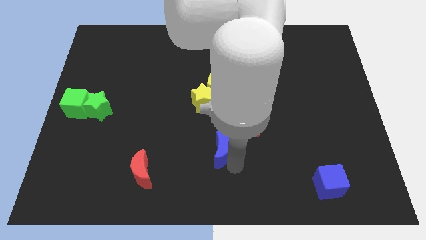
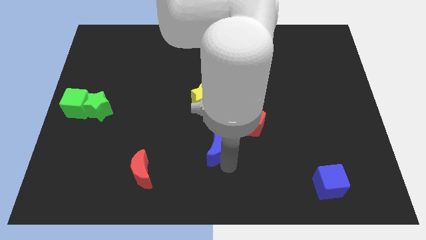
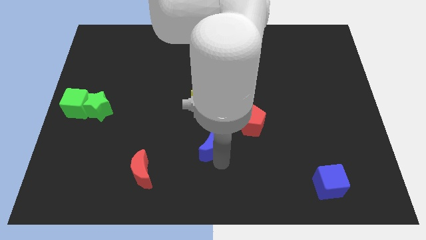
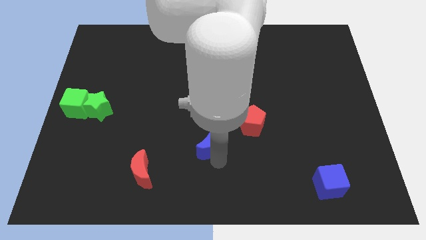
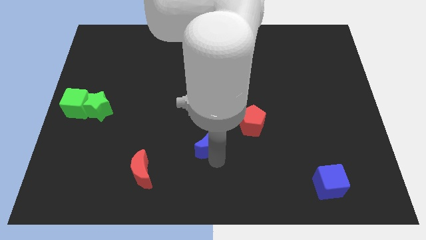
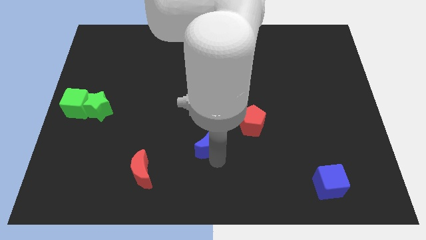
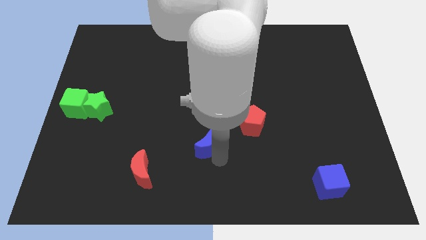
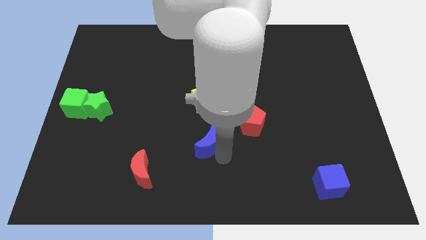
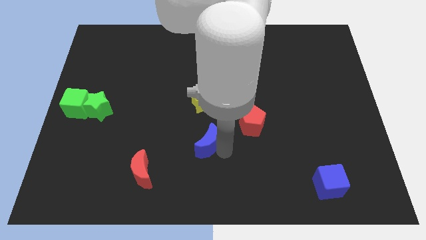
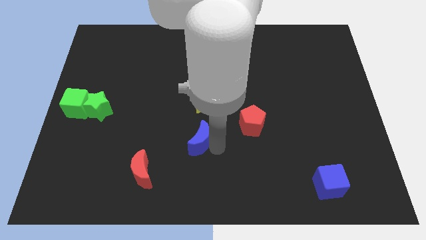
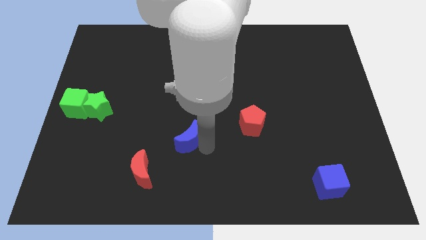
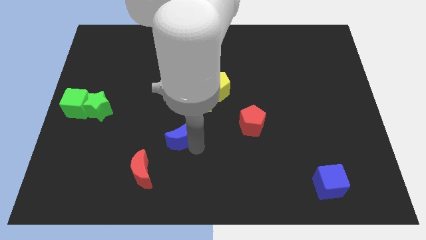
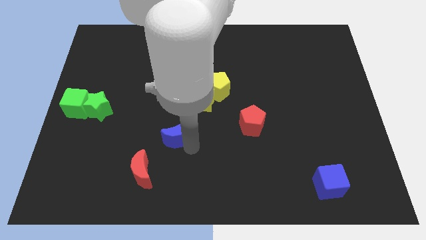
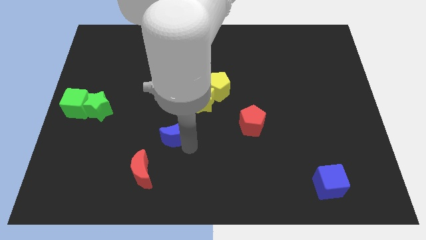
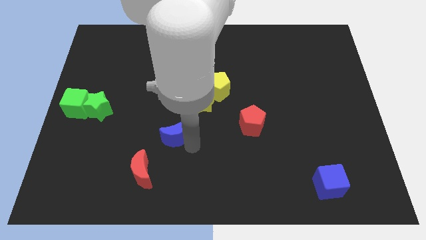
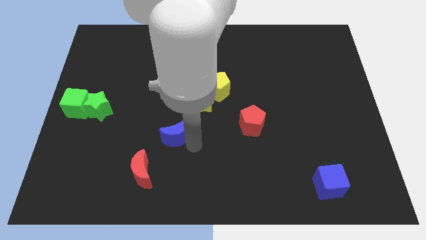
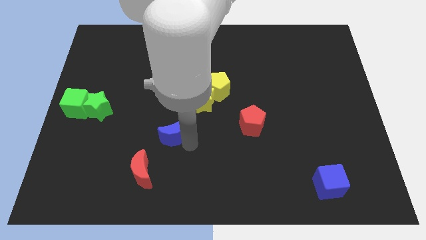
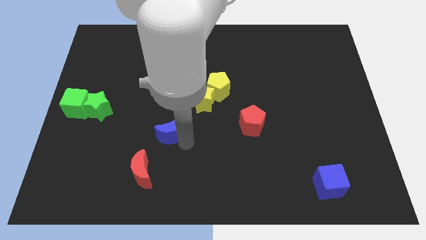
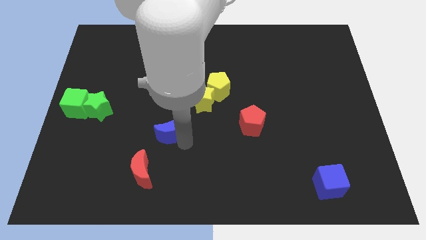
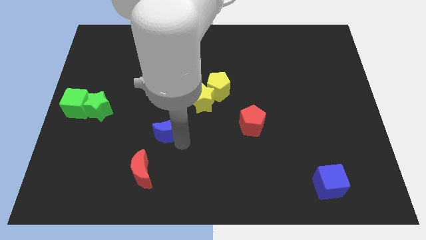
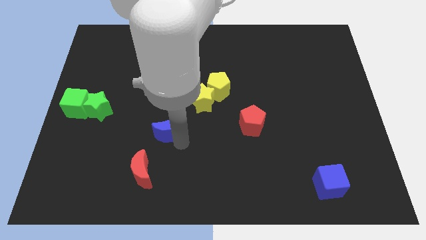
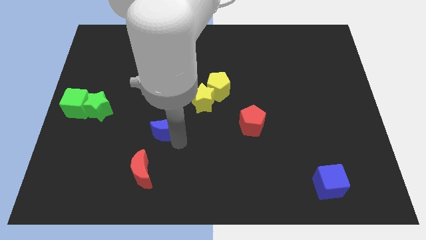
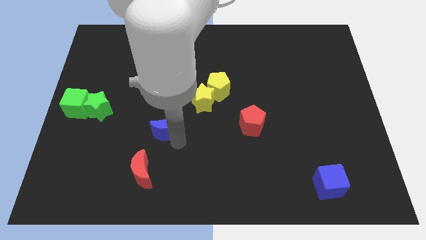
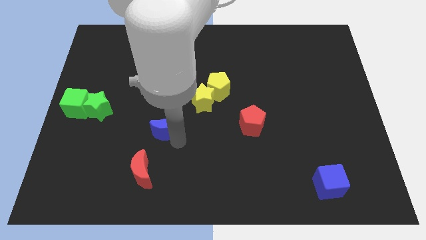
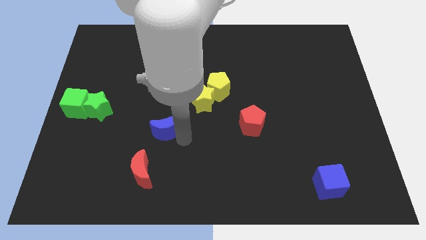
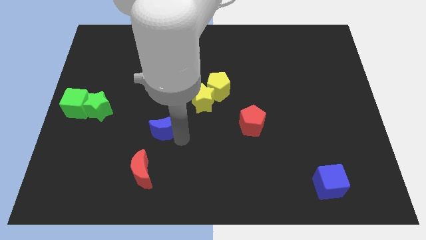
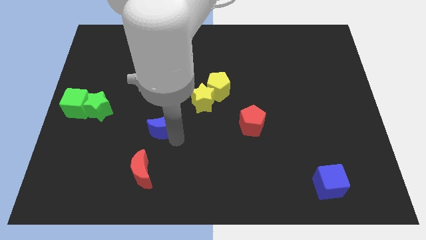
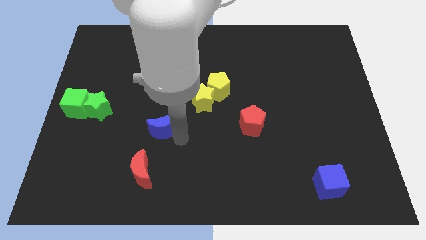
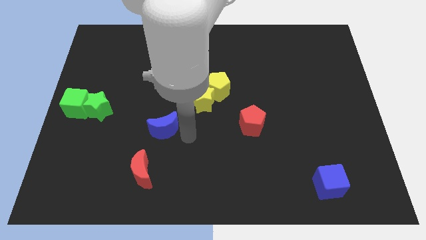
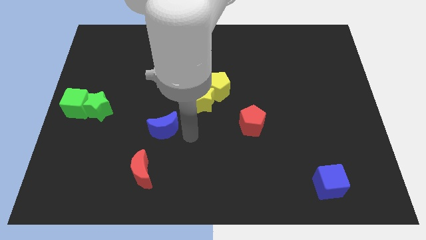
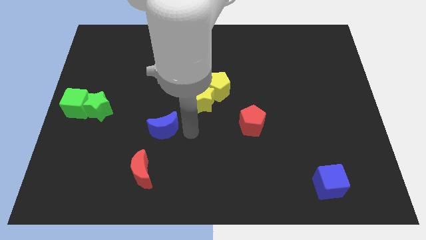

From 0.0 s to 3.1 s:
put the blue crescent to the left of the red pentagon

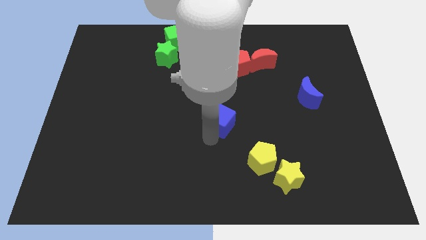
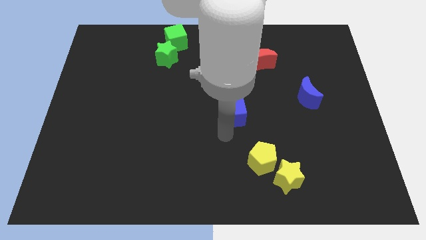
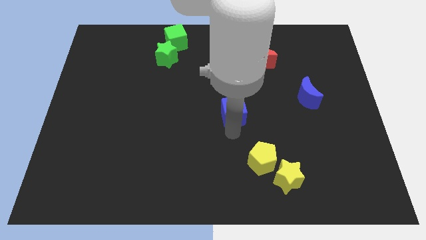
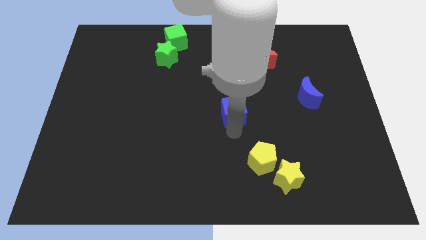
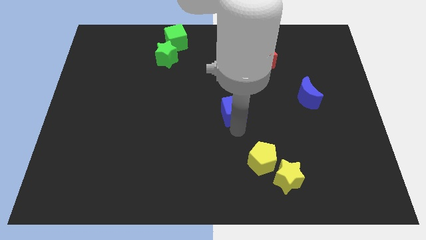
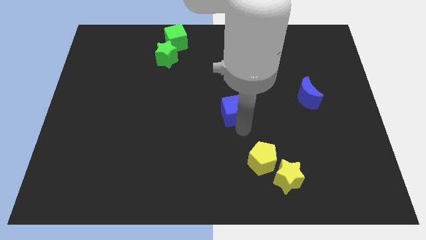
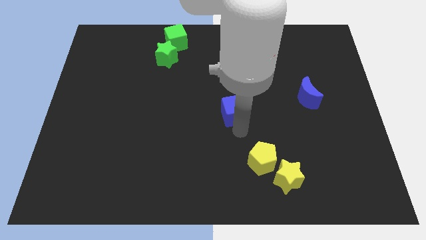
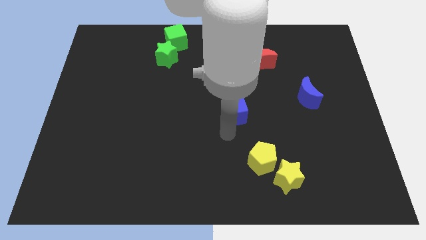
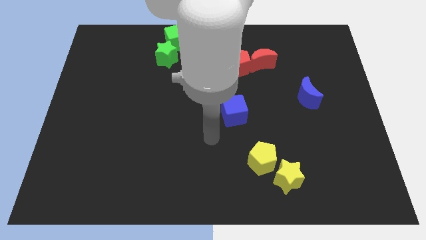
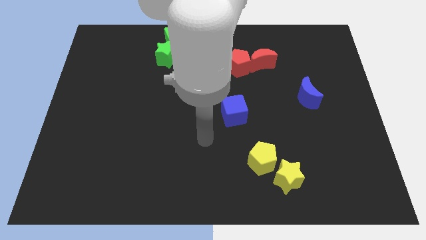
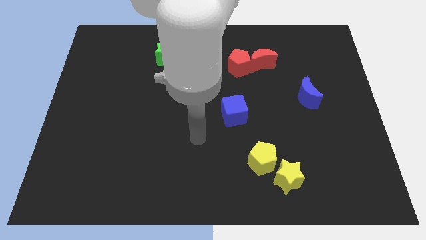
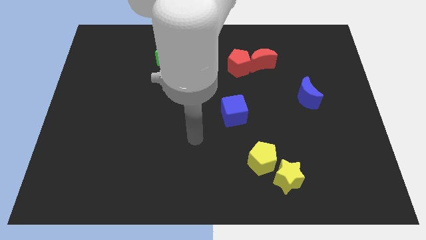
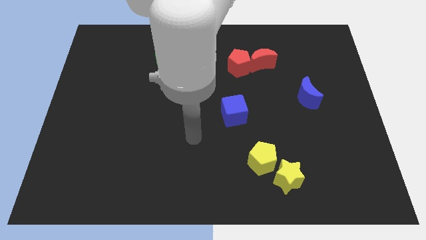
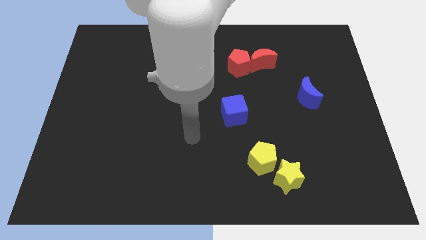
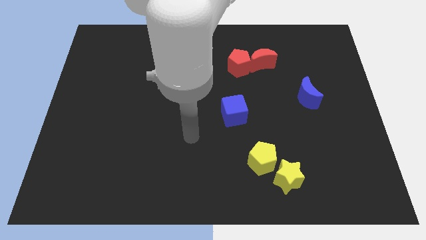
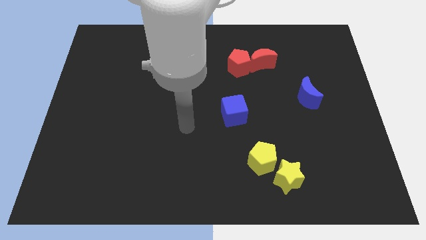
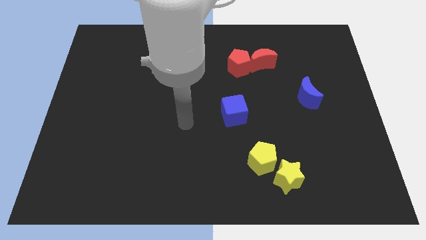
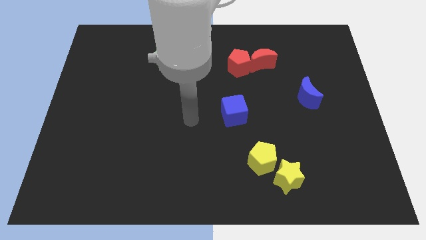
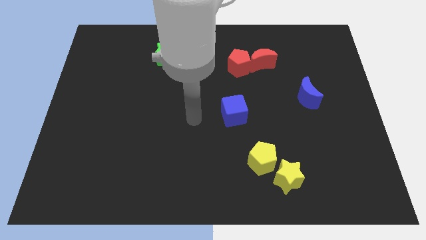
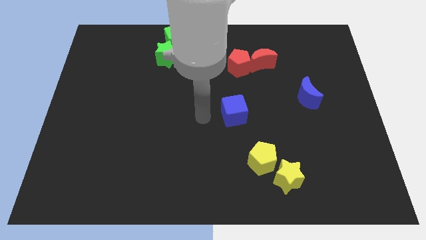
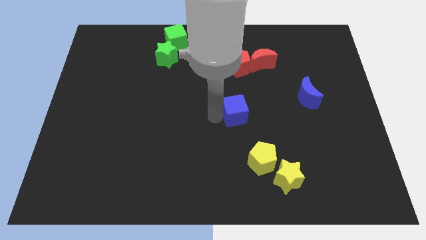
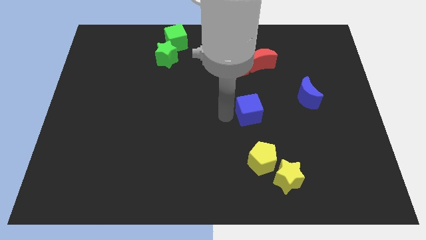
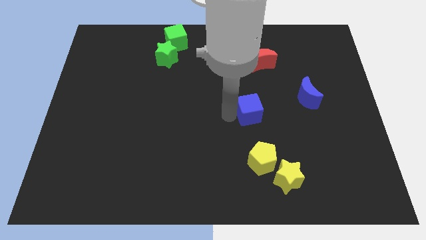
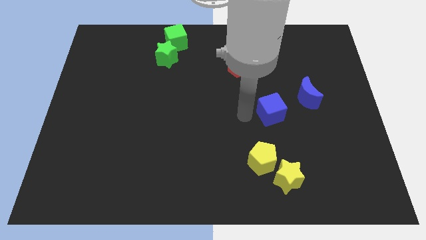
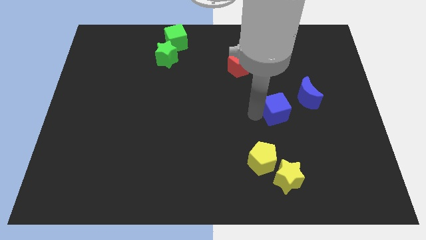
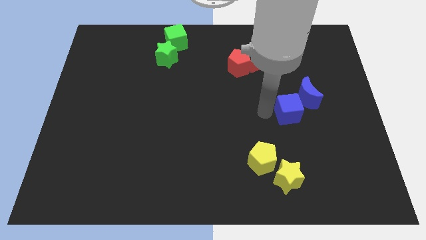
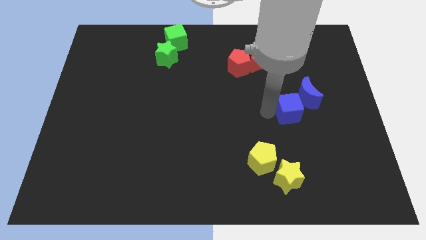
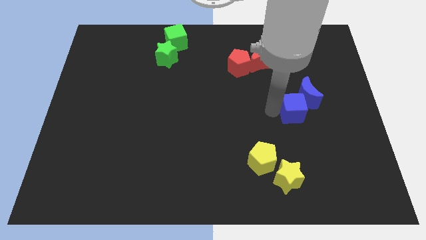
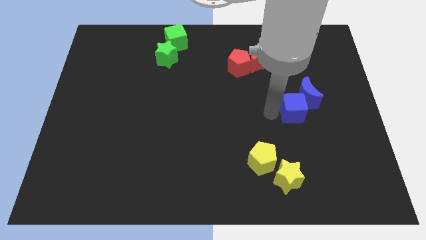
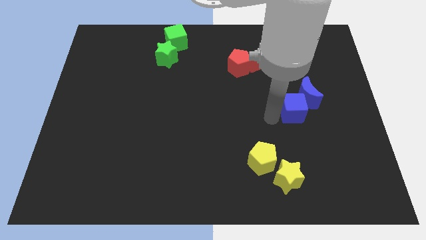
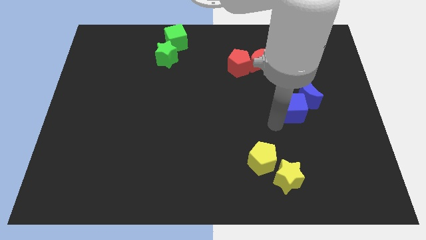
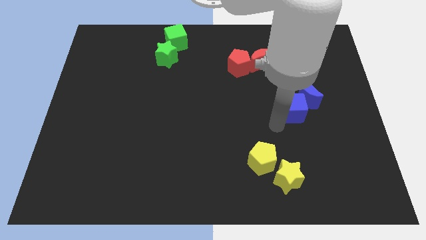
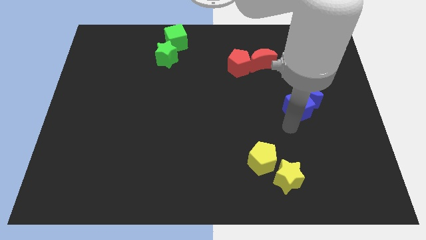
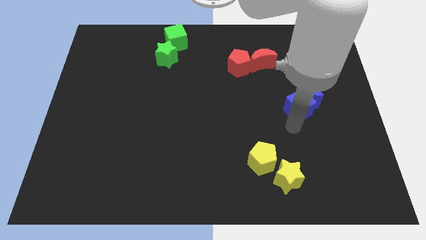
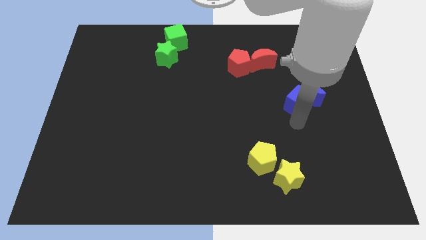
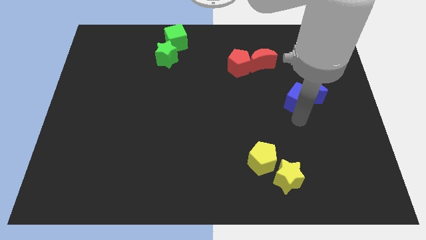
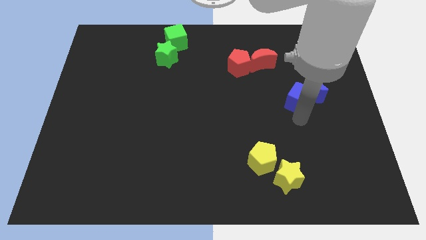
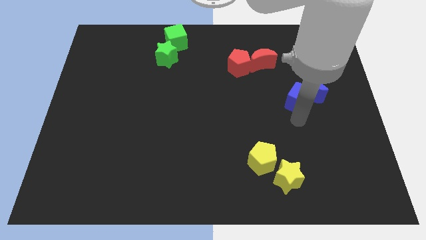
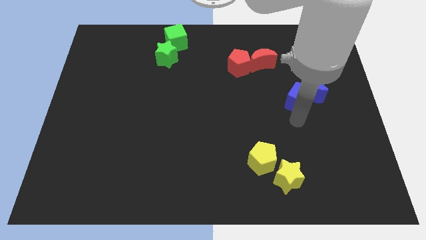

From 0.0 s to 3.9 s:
push the blue cube to the left of the blue crescent

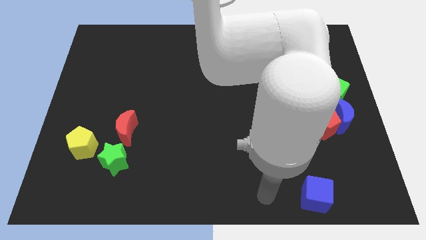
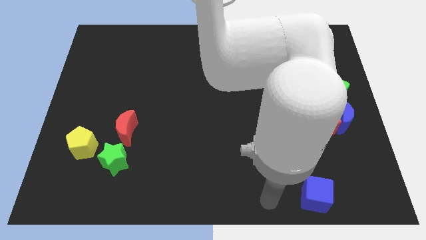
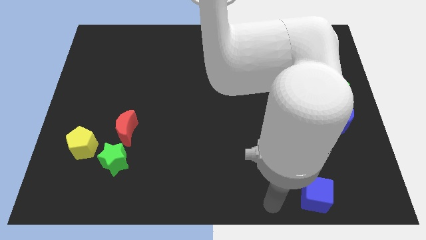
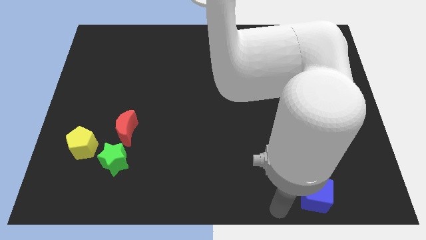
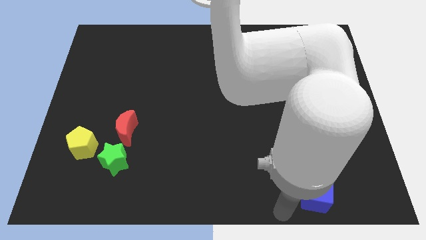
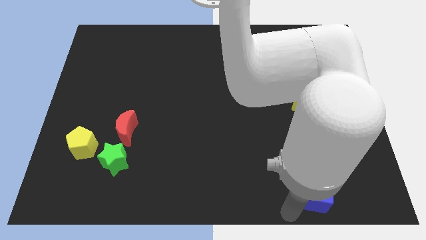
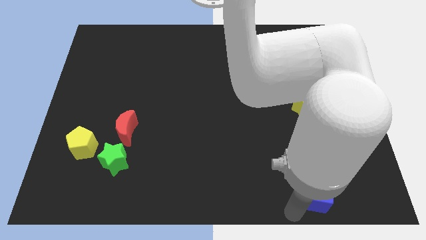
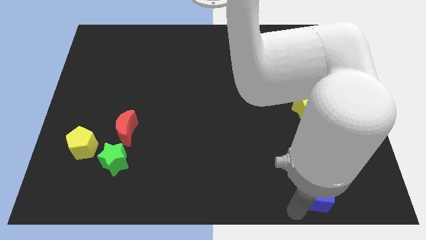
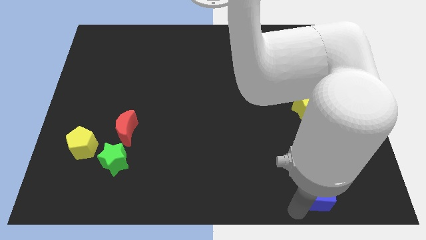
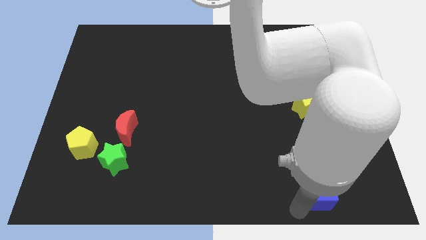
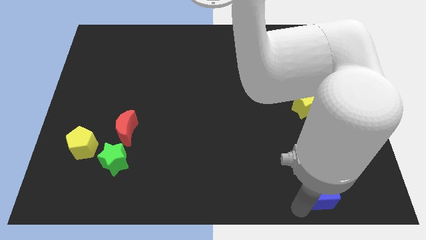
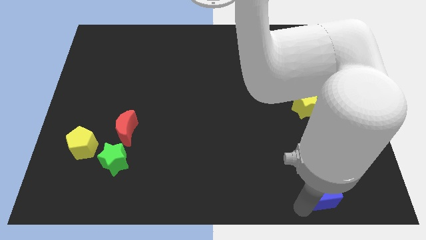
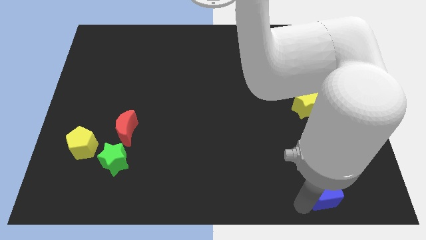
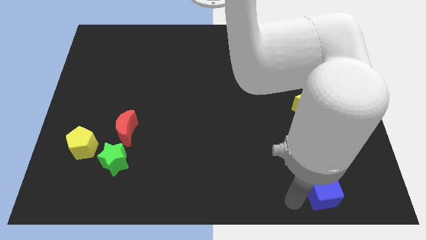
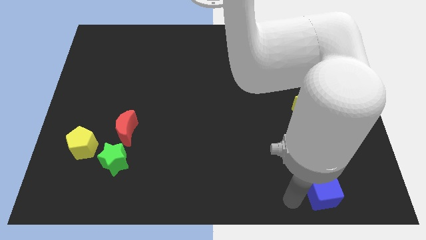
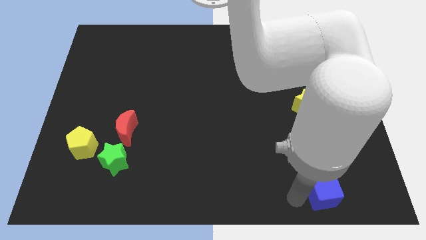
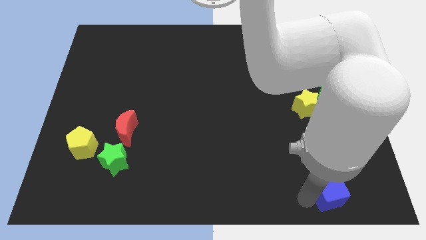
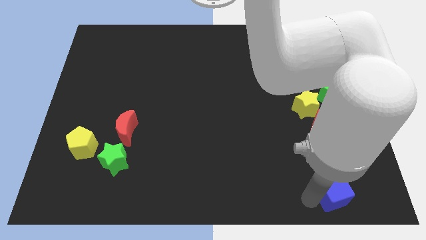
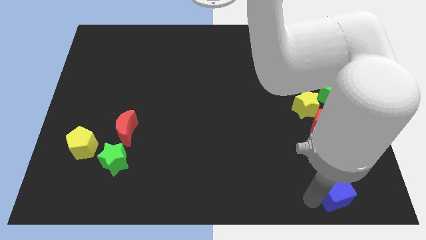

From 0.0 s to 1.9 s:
place the blue cube below the red pentagon
